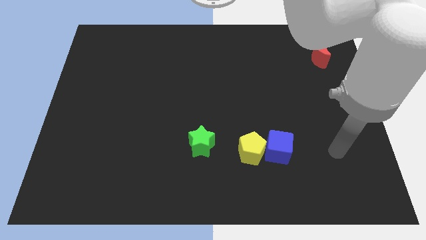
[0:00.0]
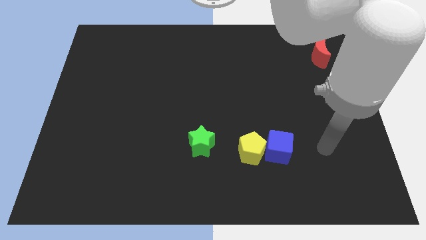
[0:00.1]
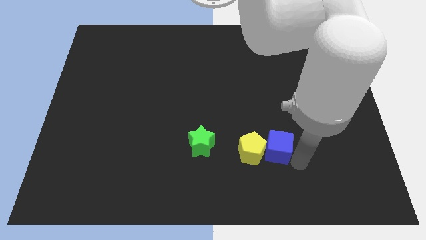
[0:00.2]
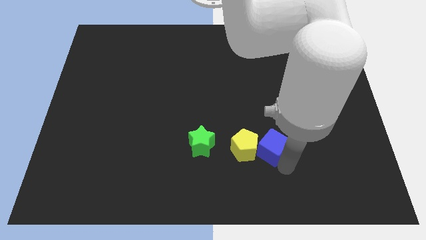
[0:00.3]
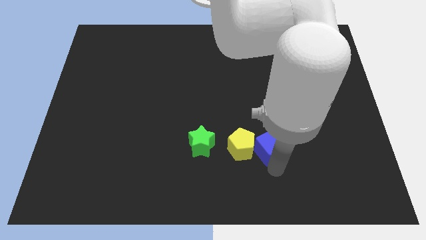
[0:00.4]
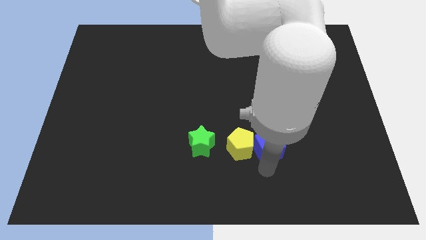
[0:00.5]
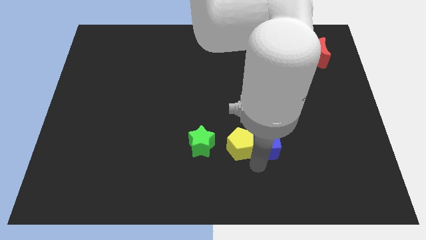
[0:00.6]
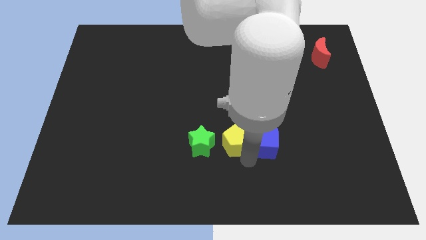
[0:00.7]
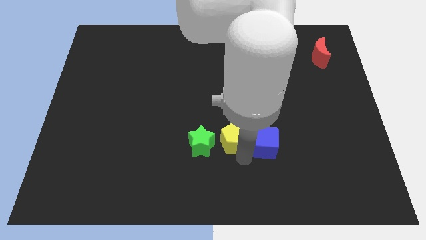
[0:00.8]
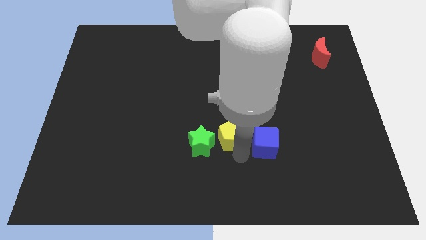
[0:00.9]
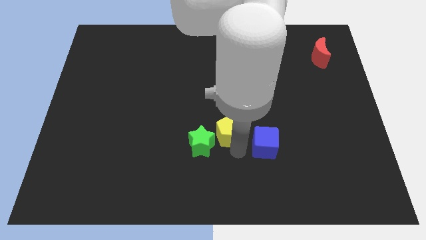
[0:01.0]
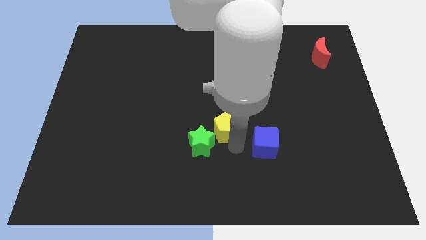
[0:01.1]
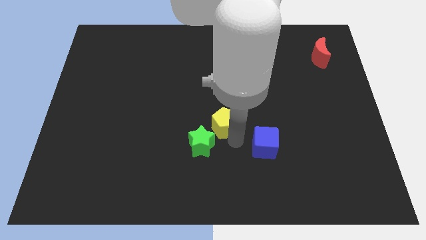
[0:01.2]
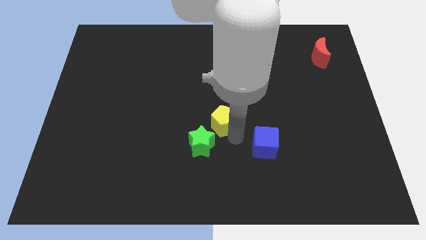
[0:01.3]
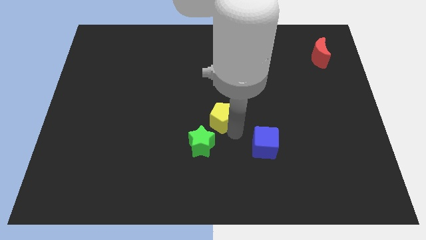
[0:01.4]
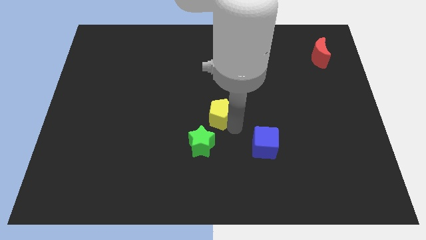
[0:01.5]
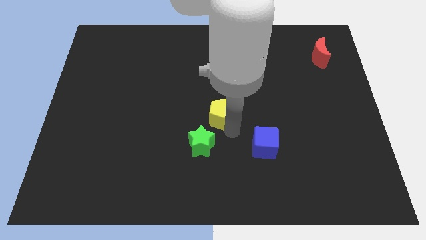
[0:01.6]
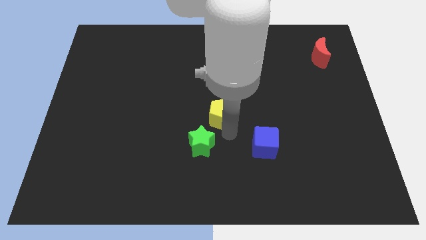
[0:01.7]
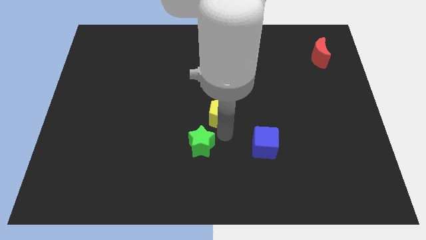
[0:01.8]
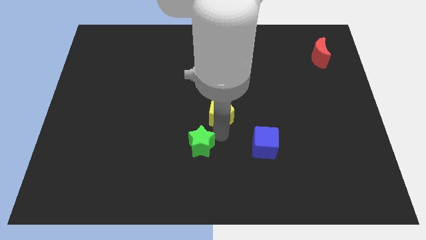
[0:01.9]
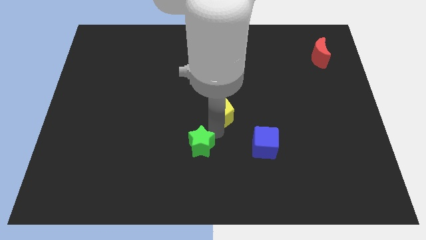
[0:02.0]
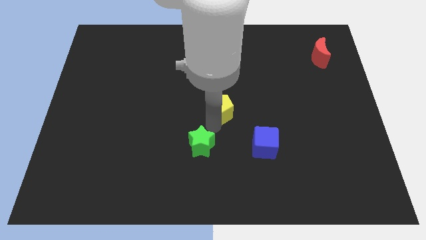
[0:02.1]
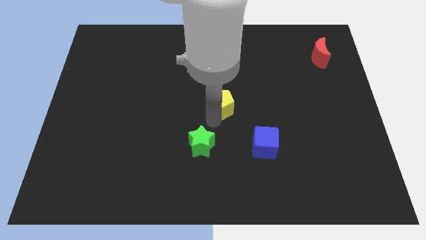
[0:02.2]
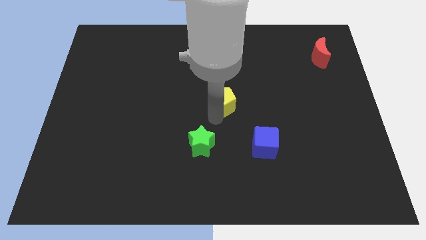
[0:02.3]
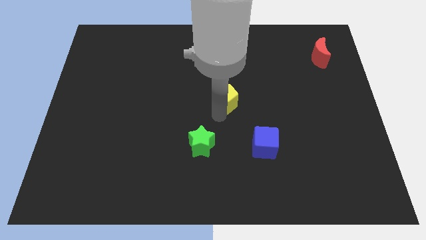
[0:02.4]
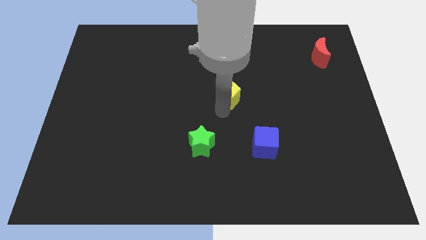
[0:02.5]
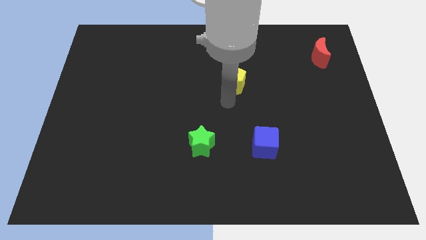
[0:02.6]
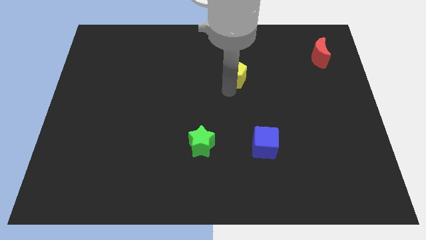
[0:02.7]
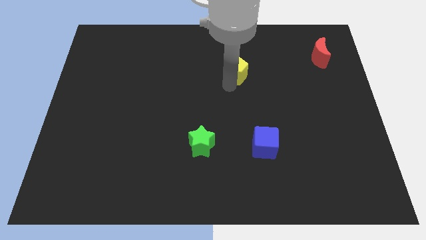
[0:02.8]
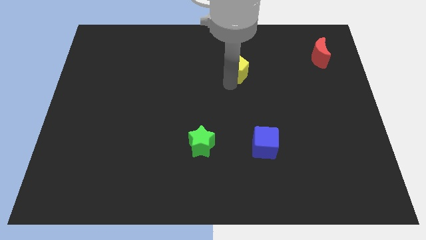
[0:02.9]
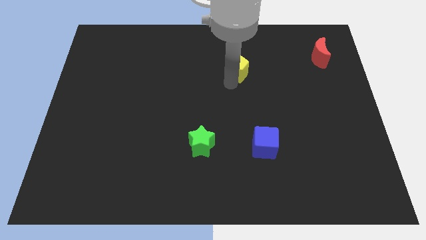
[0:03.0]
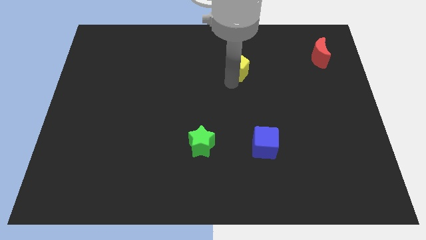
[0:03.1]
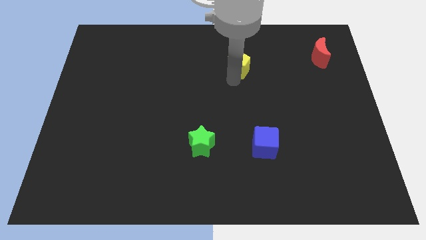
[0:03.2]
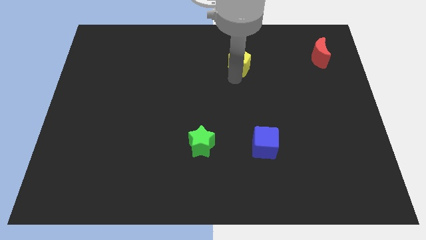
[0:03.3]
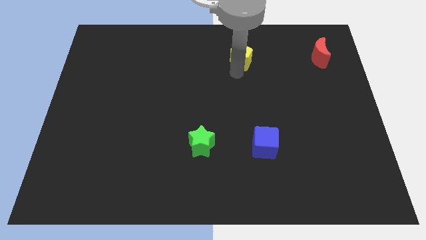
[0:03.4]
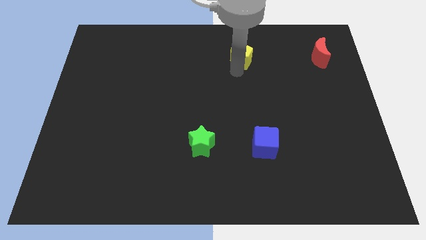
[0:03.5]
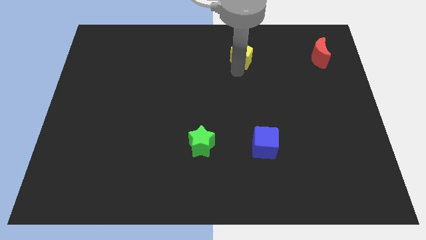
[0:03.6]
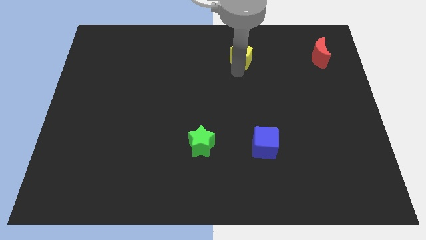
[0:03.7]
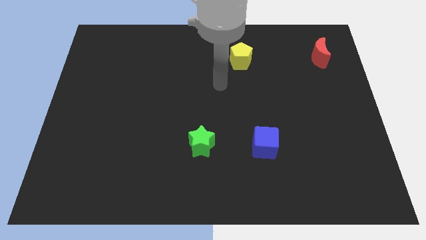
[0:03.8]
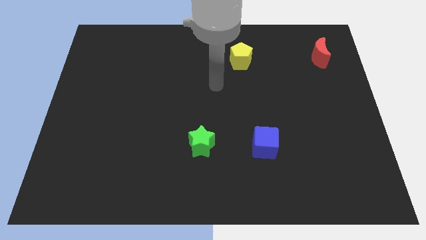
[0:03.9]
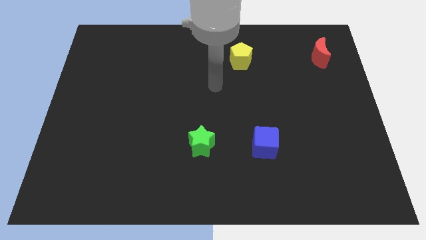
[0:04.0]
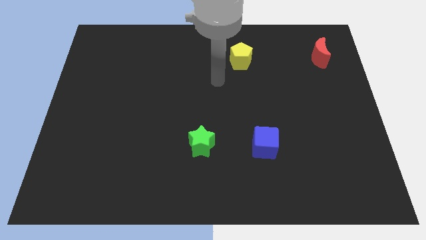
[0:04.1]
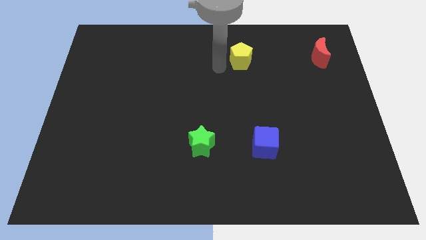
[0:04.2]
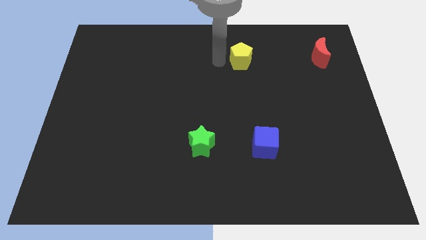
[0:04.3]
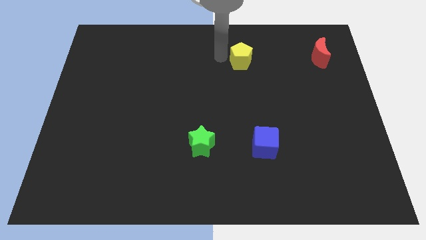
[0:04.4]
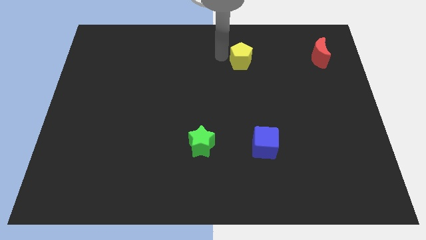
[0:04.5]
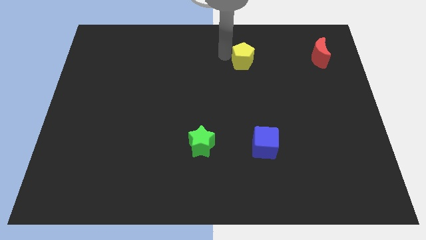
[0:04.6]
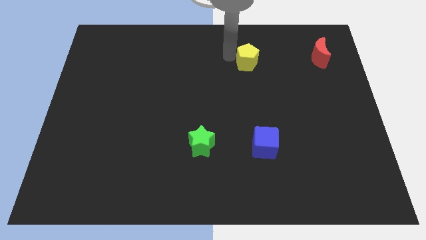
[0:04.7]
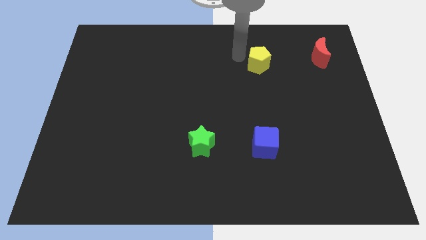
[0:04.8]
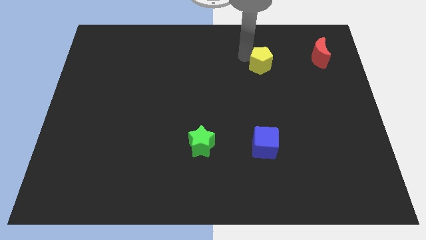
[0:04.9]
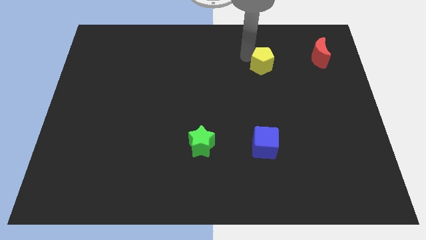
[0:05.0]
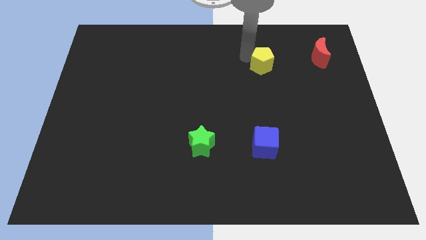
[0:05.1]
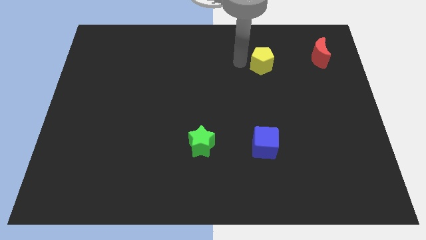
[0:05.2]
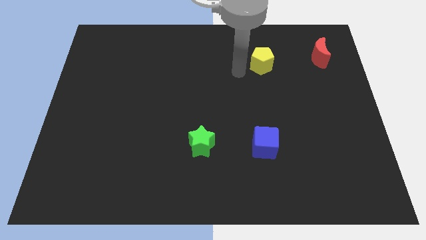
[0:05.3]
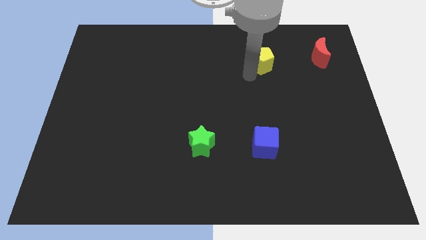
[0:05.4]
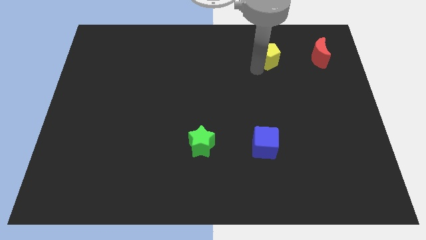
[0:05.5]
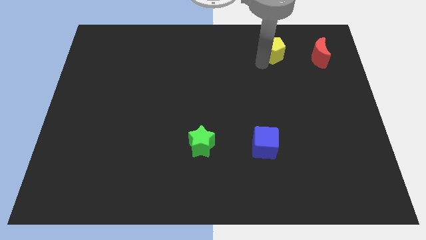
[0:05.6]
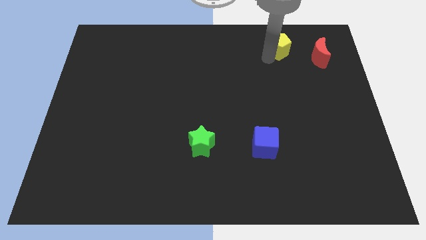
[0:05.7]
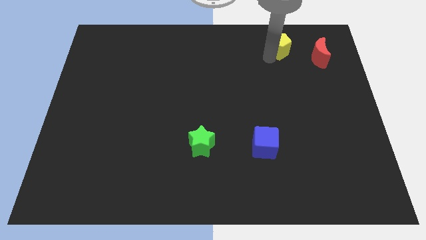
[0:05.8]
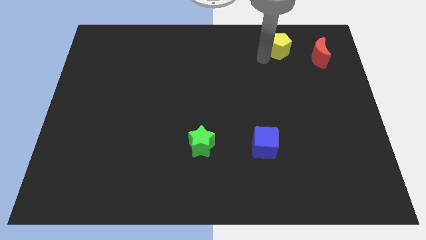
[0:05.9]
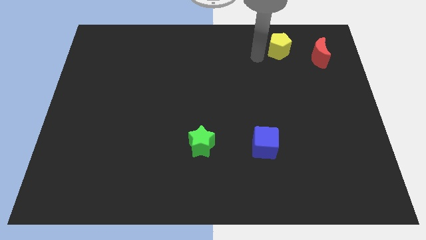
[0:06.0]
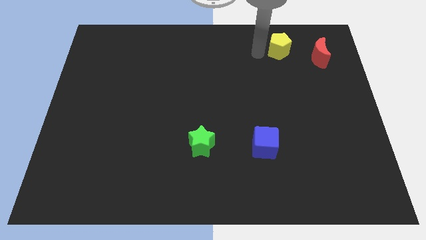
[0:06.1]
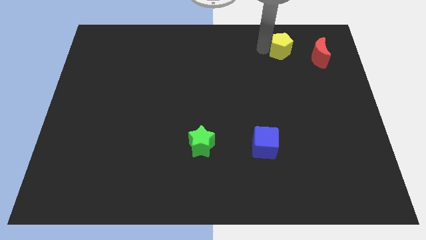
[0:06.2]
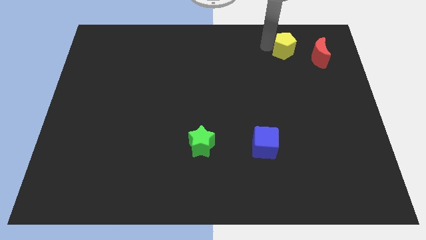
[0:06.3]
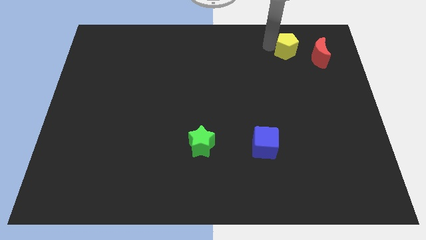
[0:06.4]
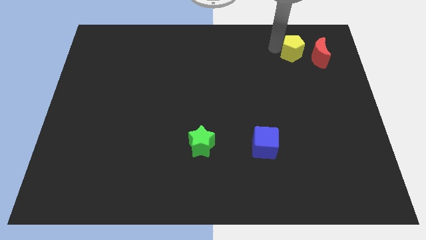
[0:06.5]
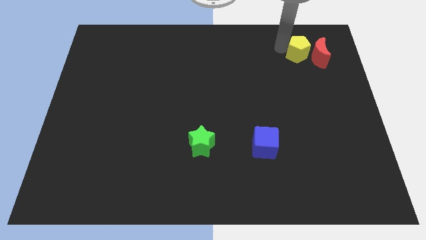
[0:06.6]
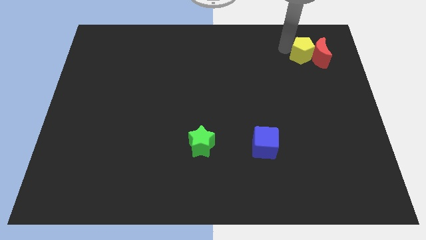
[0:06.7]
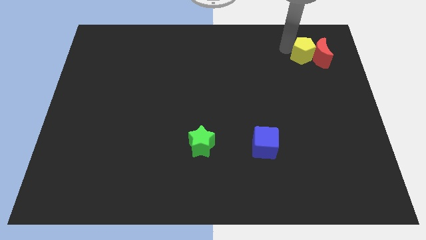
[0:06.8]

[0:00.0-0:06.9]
put the yellow block towards the moon

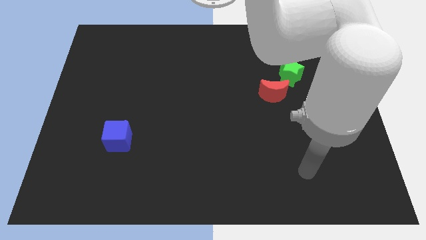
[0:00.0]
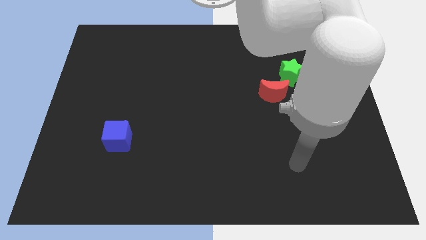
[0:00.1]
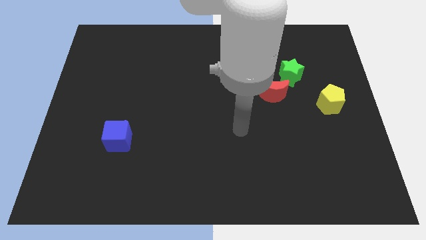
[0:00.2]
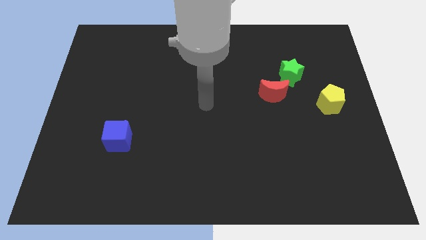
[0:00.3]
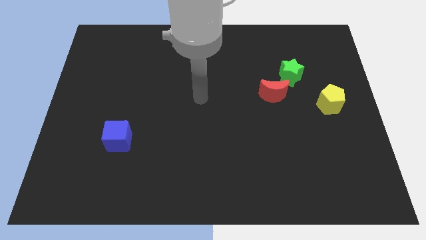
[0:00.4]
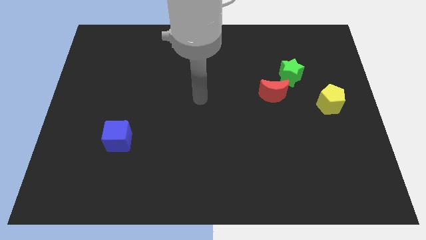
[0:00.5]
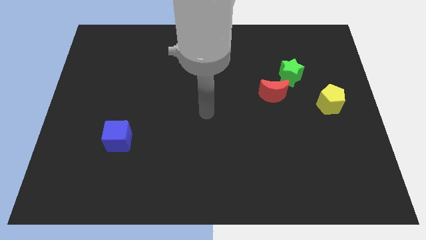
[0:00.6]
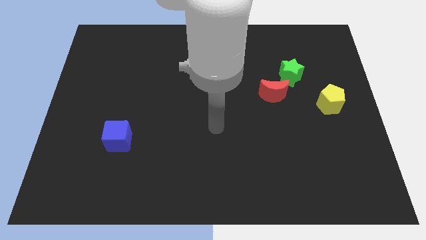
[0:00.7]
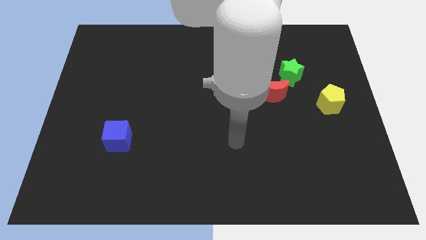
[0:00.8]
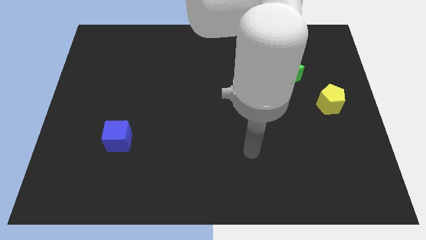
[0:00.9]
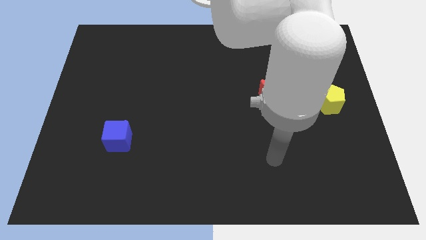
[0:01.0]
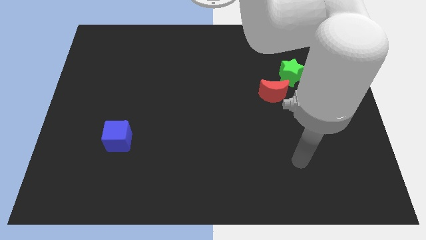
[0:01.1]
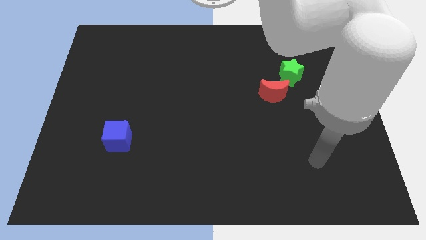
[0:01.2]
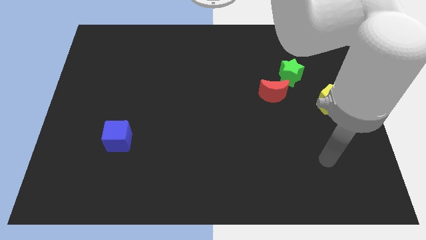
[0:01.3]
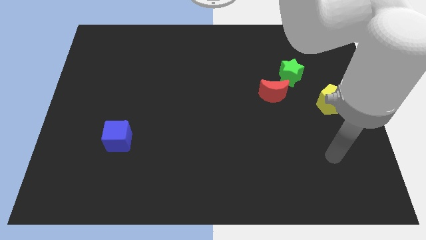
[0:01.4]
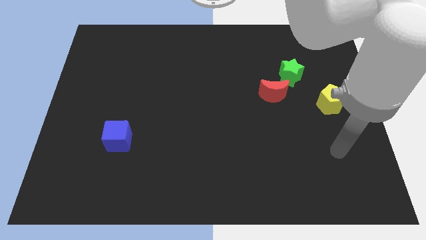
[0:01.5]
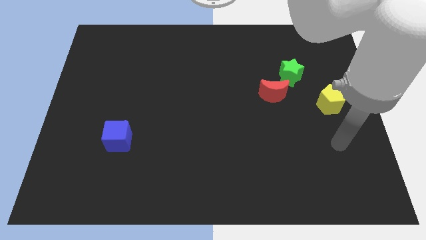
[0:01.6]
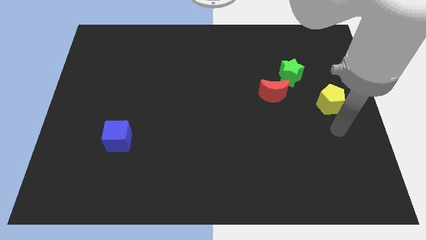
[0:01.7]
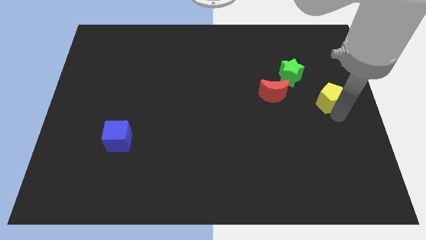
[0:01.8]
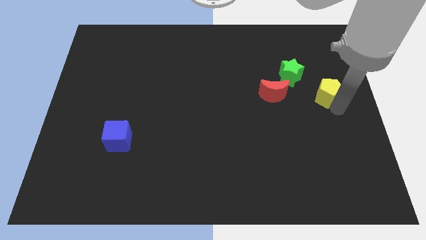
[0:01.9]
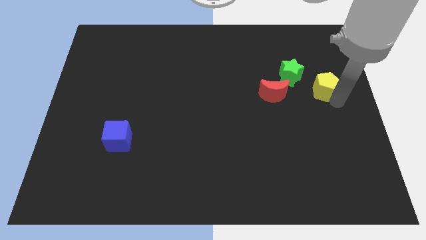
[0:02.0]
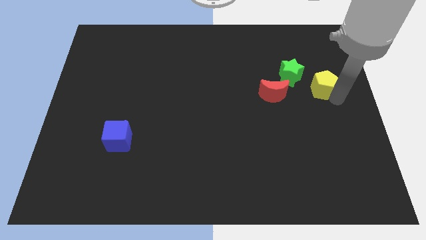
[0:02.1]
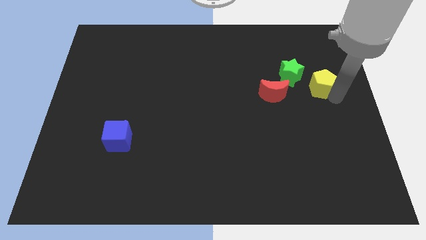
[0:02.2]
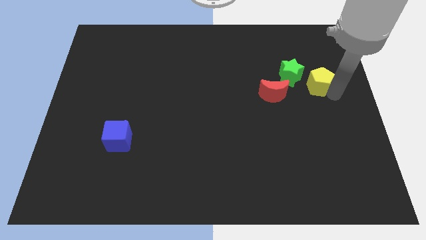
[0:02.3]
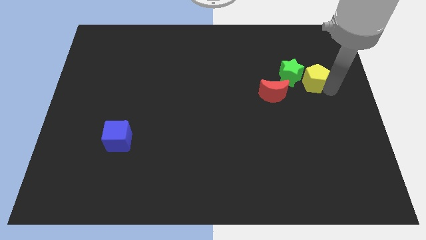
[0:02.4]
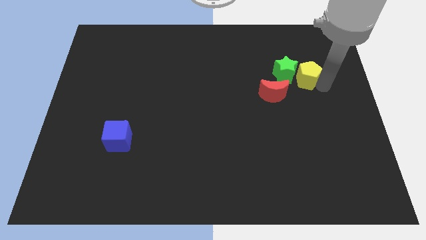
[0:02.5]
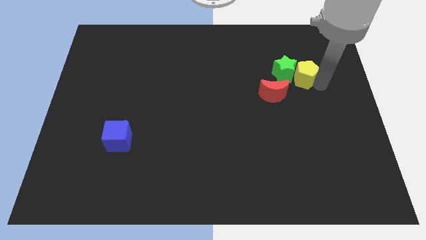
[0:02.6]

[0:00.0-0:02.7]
put the pentagon to the green star
